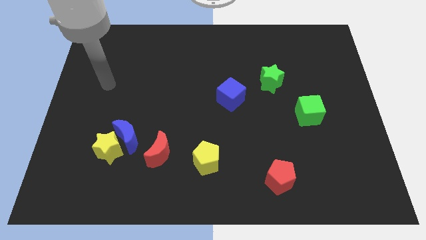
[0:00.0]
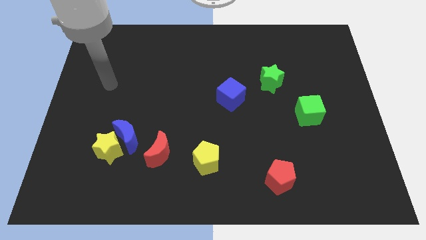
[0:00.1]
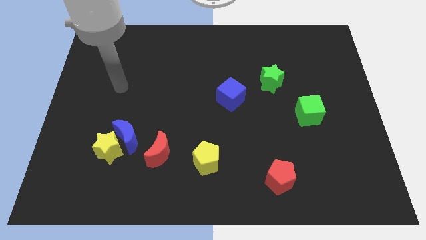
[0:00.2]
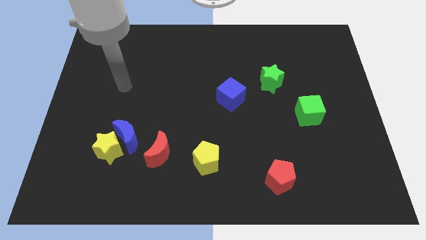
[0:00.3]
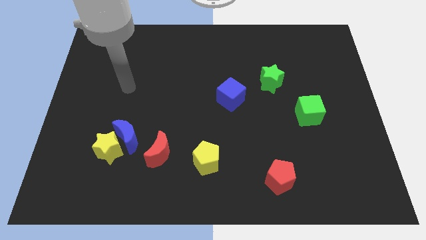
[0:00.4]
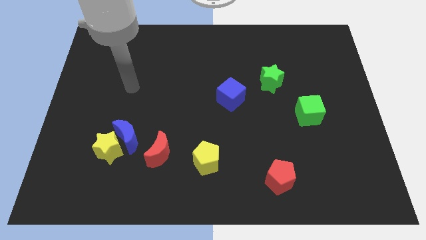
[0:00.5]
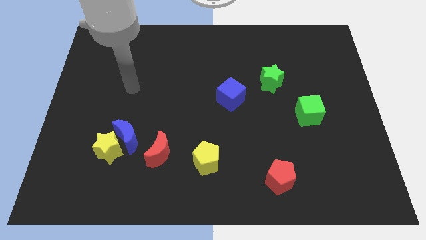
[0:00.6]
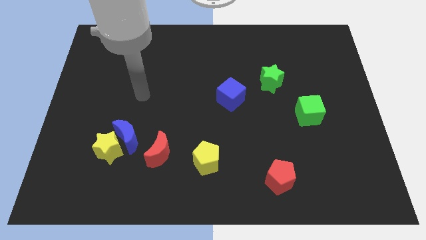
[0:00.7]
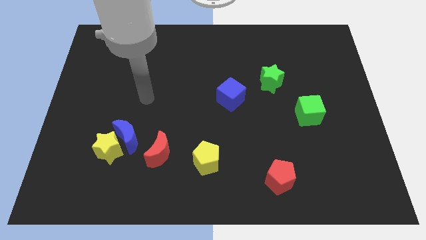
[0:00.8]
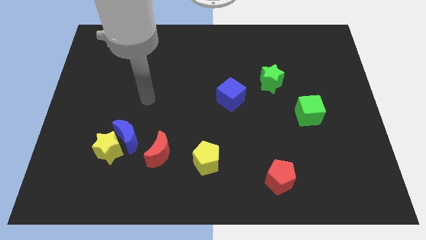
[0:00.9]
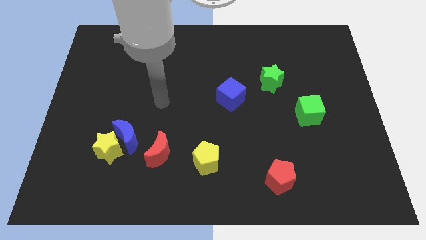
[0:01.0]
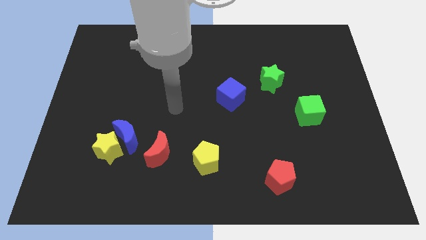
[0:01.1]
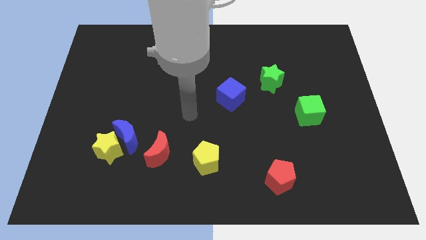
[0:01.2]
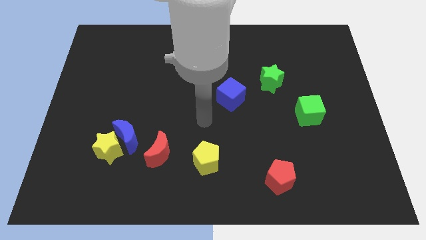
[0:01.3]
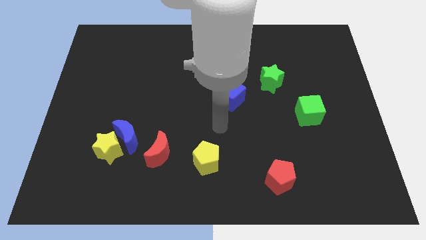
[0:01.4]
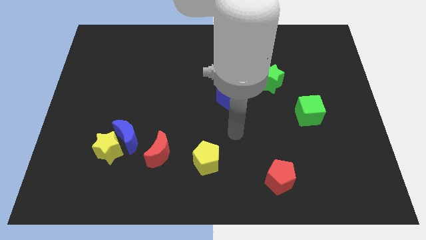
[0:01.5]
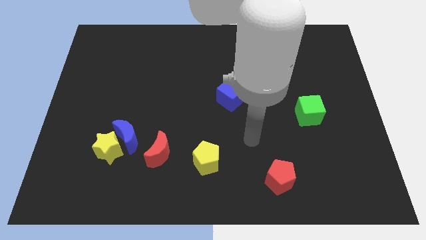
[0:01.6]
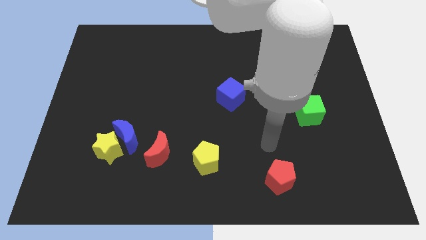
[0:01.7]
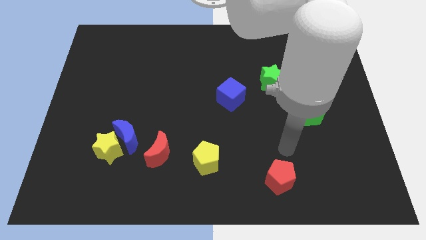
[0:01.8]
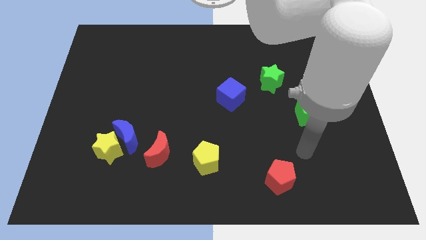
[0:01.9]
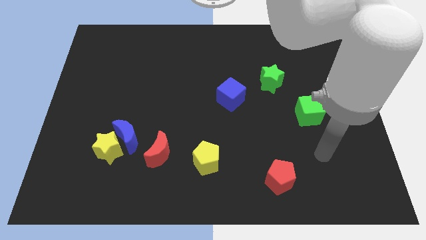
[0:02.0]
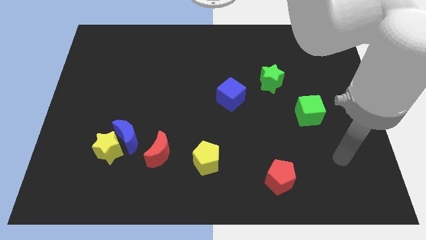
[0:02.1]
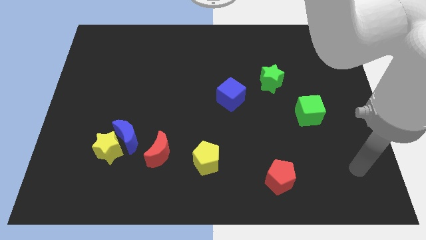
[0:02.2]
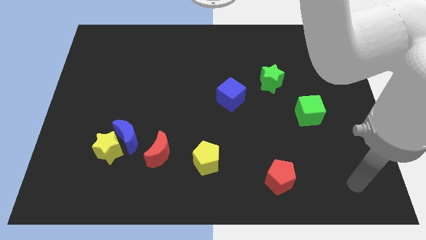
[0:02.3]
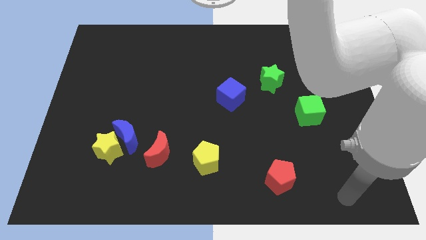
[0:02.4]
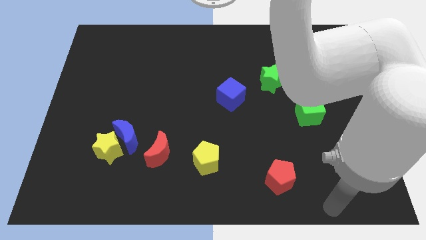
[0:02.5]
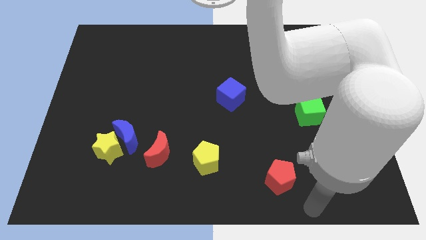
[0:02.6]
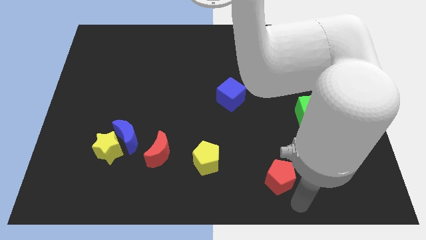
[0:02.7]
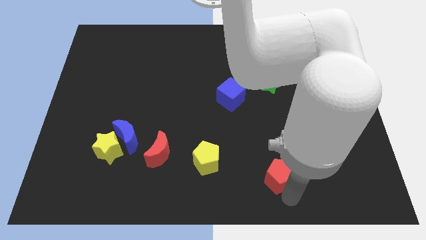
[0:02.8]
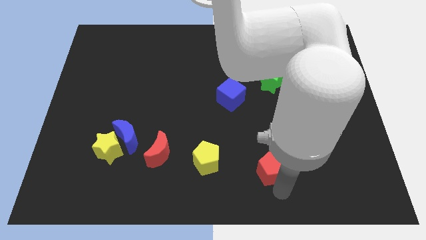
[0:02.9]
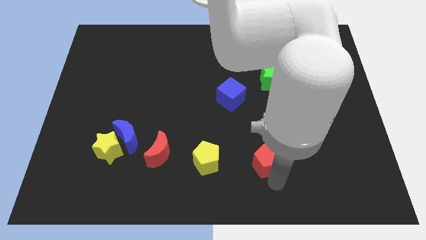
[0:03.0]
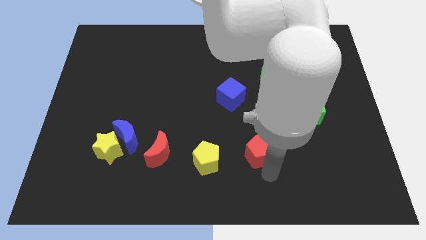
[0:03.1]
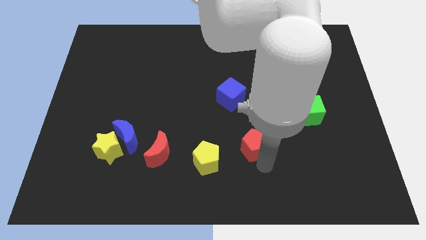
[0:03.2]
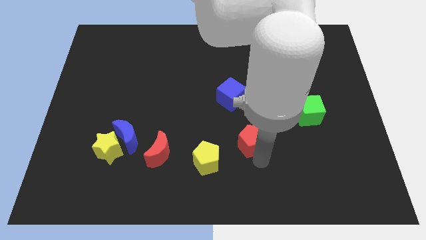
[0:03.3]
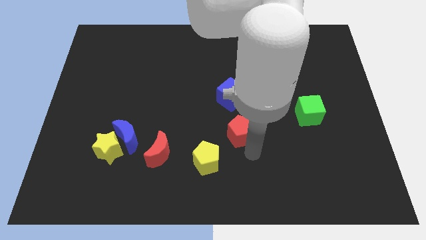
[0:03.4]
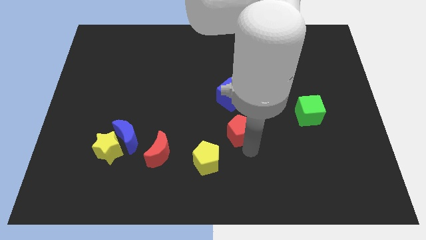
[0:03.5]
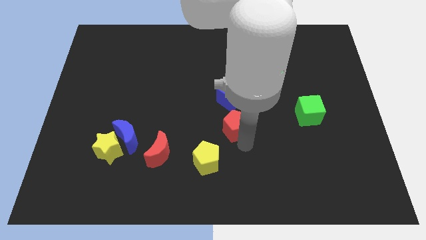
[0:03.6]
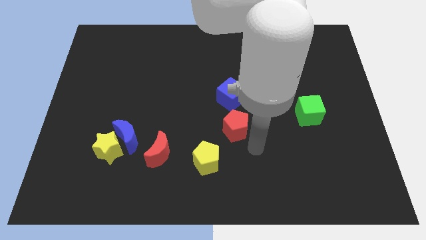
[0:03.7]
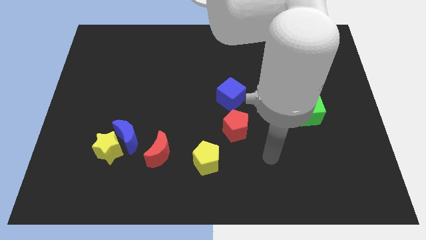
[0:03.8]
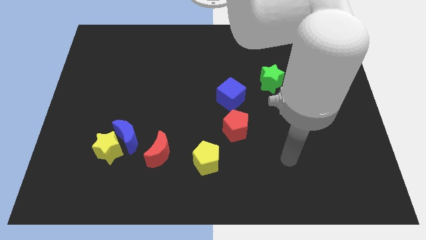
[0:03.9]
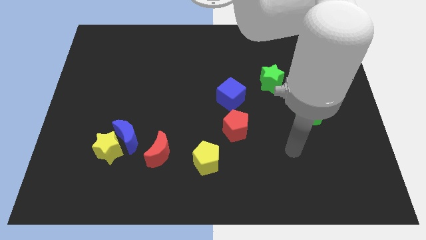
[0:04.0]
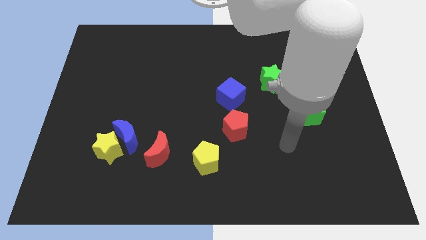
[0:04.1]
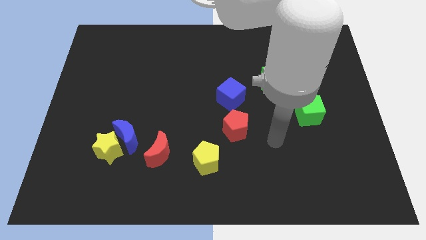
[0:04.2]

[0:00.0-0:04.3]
place the red pentagon below the blue cube

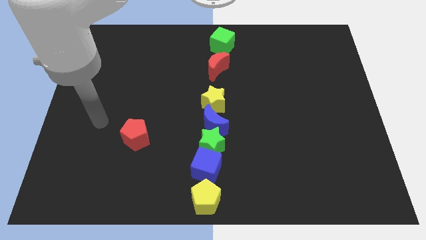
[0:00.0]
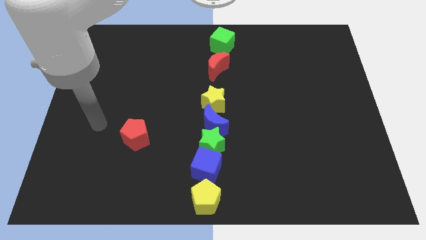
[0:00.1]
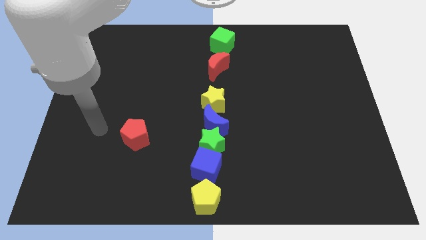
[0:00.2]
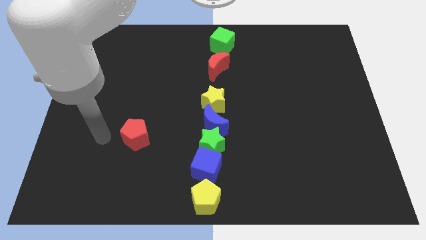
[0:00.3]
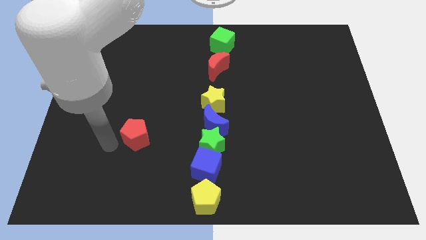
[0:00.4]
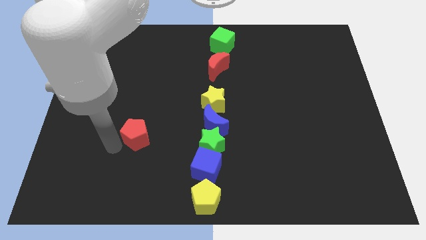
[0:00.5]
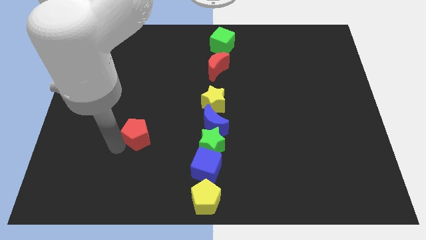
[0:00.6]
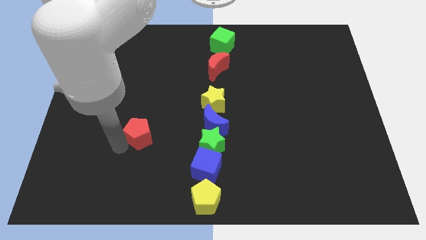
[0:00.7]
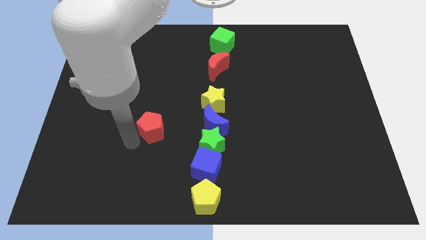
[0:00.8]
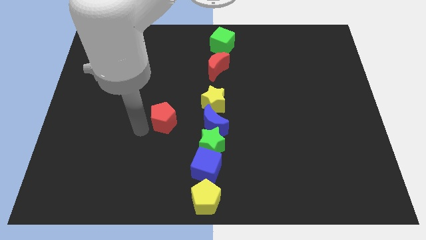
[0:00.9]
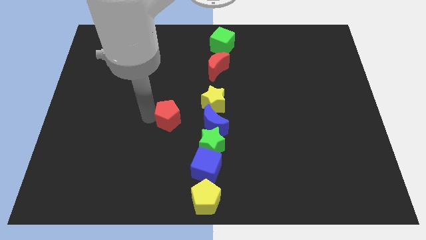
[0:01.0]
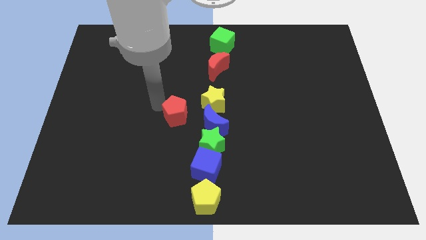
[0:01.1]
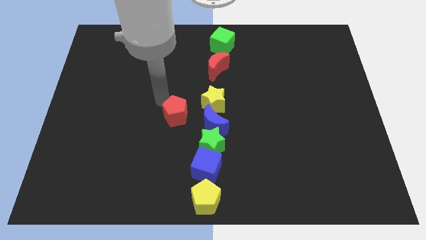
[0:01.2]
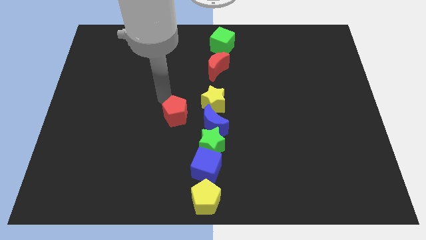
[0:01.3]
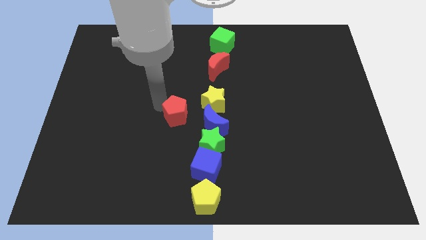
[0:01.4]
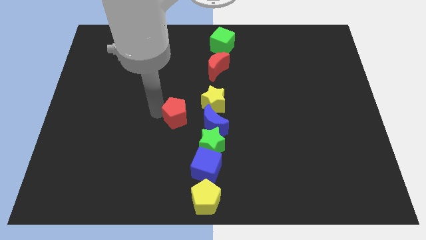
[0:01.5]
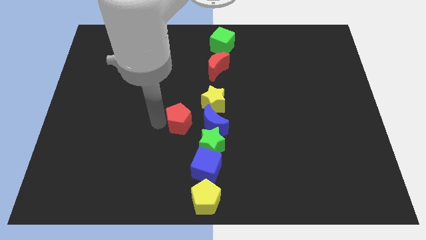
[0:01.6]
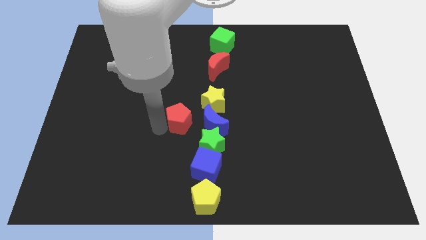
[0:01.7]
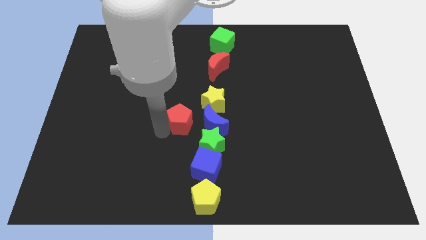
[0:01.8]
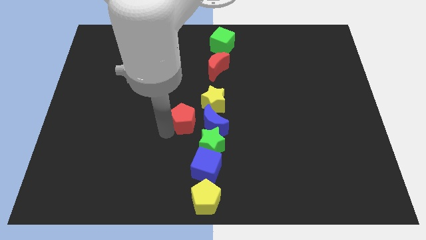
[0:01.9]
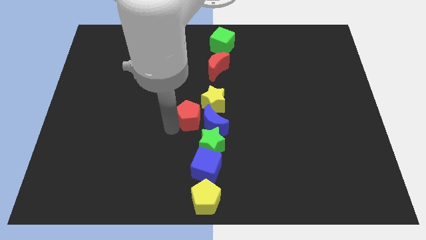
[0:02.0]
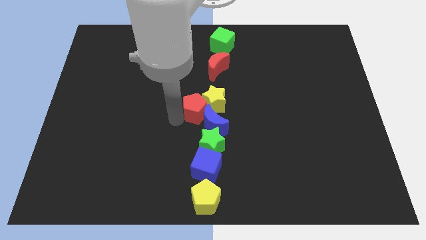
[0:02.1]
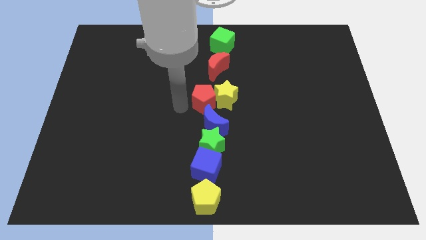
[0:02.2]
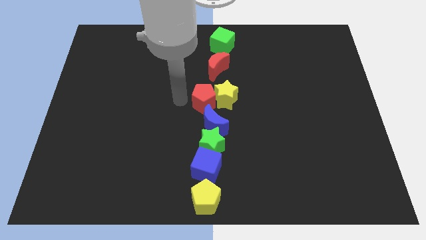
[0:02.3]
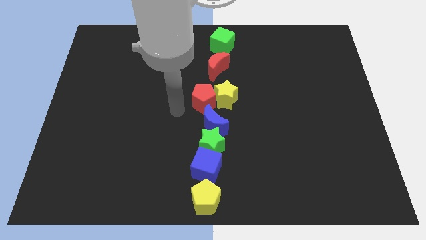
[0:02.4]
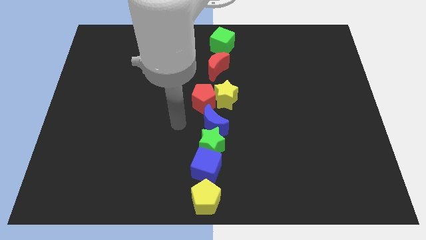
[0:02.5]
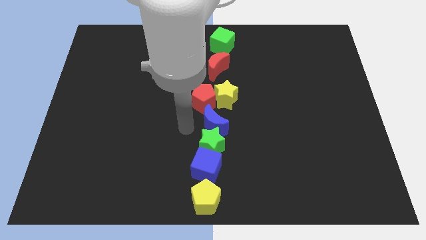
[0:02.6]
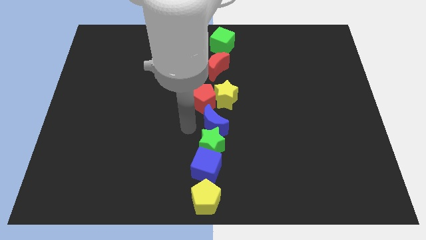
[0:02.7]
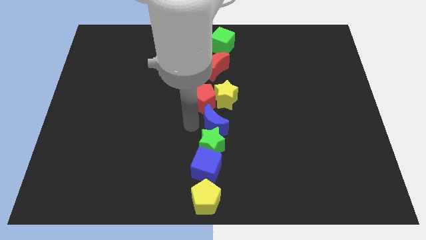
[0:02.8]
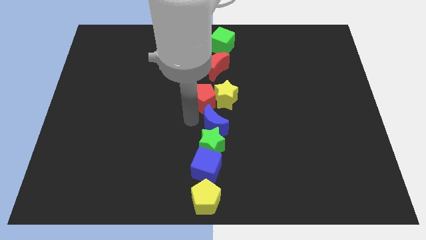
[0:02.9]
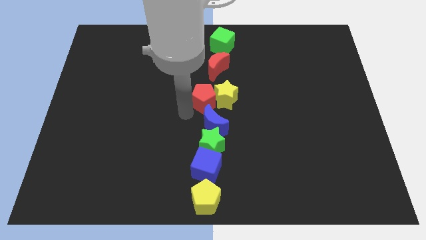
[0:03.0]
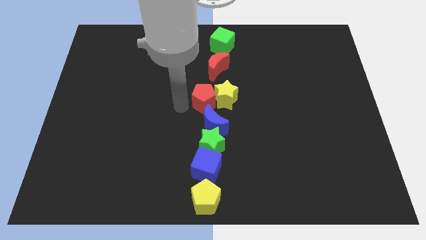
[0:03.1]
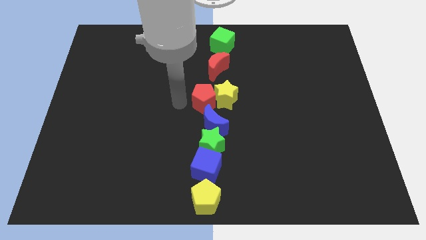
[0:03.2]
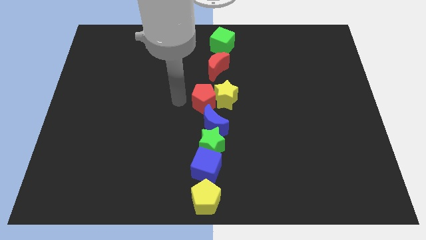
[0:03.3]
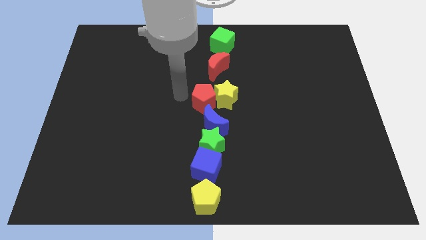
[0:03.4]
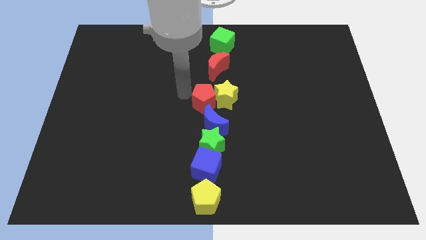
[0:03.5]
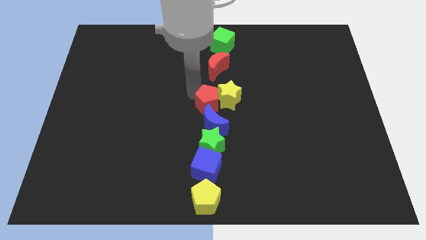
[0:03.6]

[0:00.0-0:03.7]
push red pentagon close to yellow star

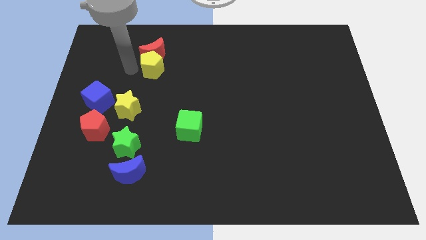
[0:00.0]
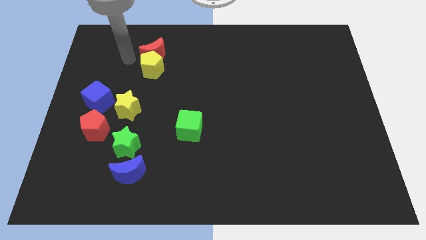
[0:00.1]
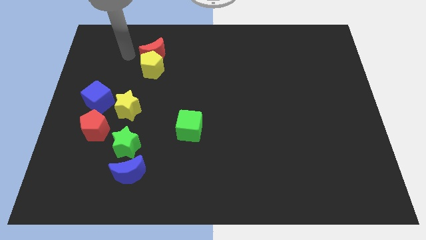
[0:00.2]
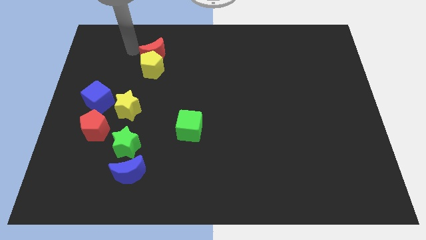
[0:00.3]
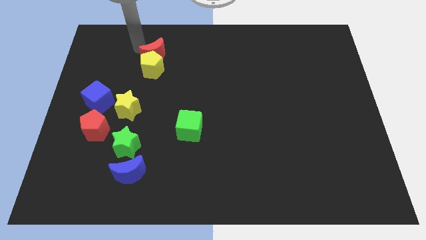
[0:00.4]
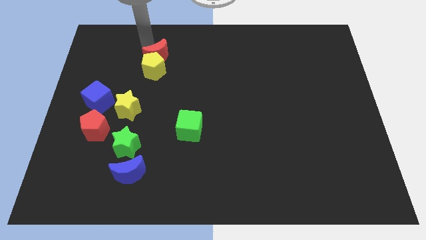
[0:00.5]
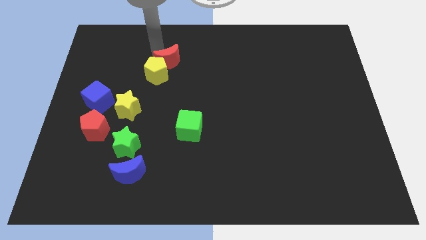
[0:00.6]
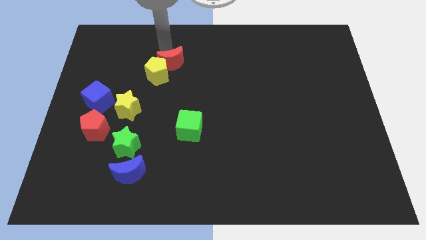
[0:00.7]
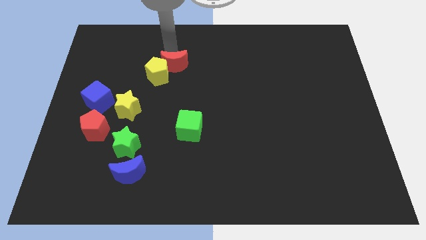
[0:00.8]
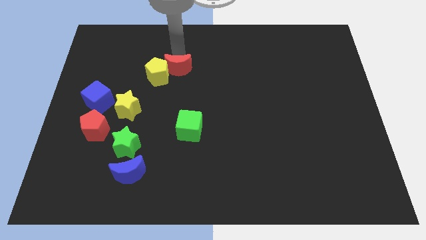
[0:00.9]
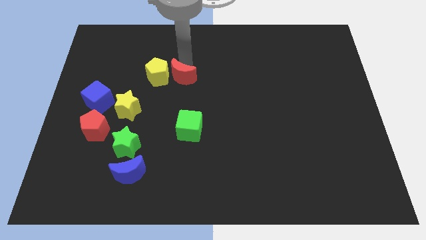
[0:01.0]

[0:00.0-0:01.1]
place red moon to the right of yellow pentagon
